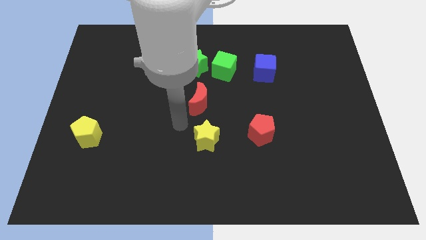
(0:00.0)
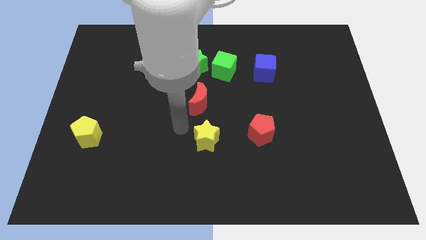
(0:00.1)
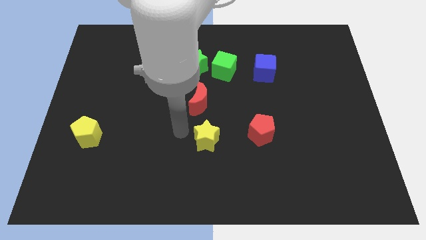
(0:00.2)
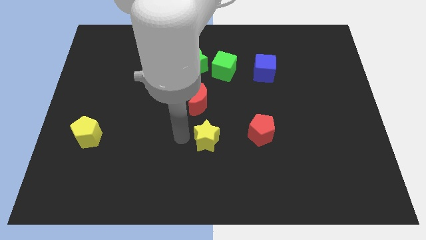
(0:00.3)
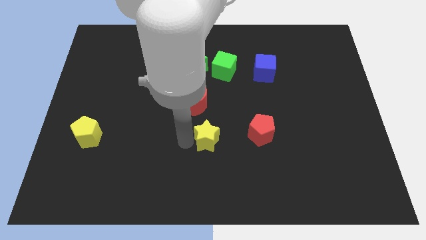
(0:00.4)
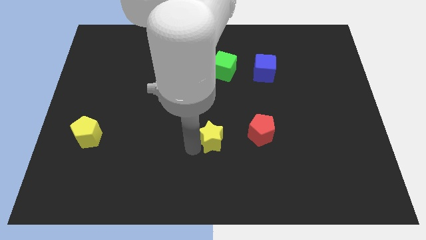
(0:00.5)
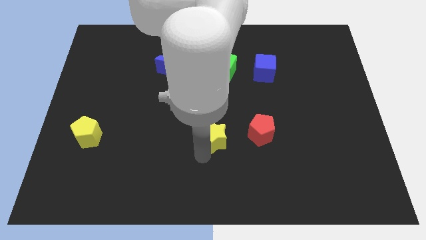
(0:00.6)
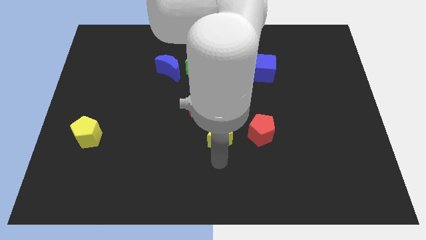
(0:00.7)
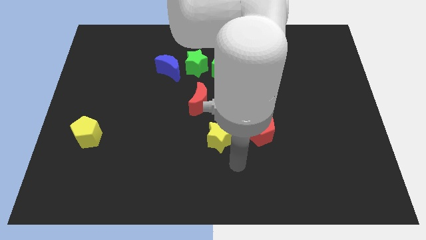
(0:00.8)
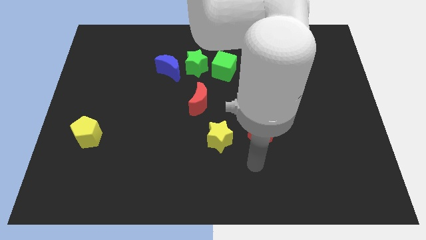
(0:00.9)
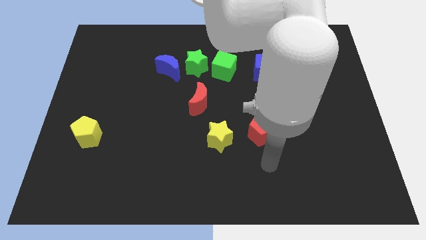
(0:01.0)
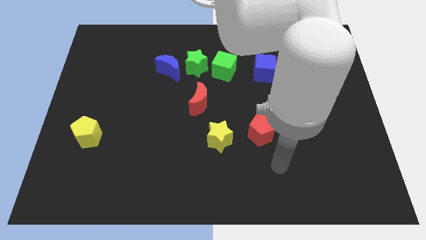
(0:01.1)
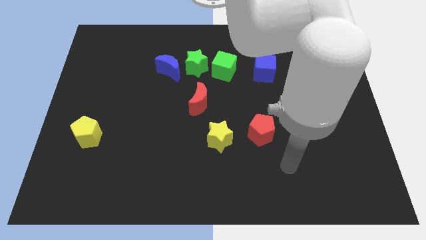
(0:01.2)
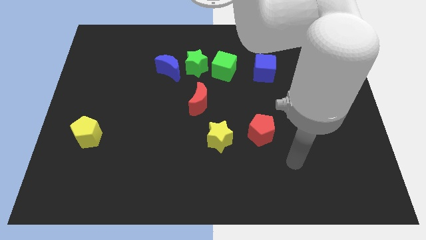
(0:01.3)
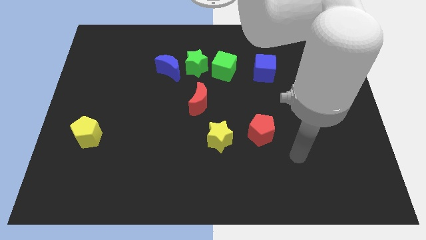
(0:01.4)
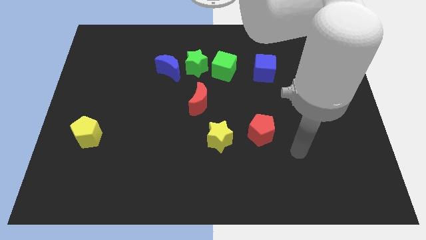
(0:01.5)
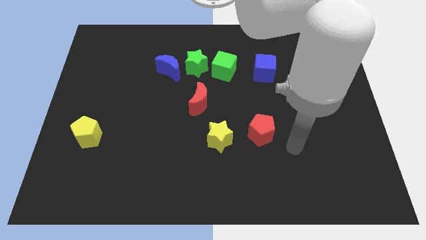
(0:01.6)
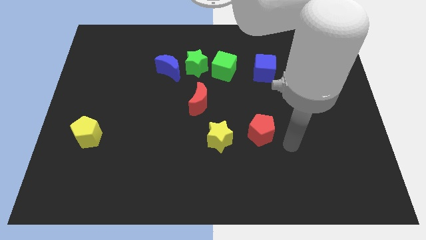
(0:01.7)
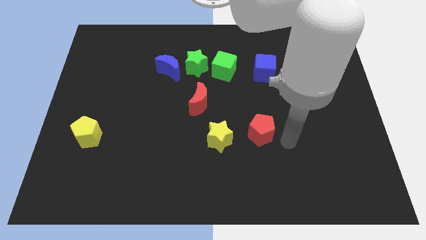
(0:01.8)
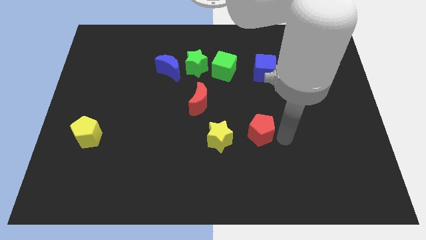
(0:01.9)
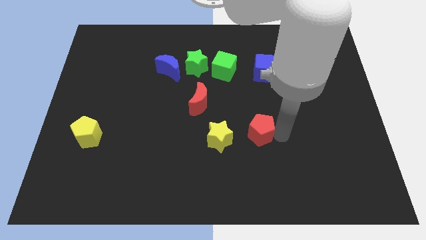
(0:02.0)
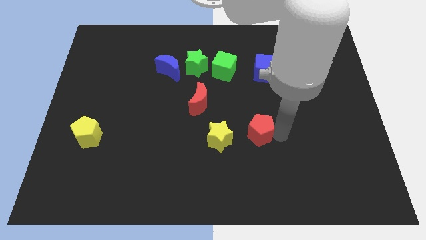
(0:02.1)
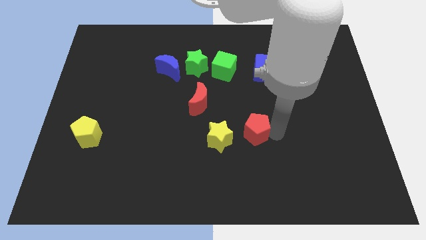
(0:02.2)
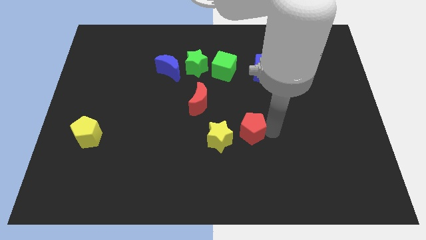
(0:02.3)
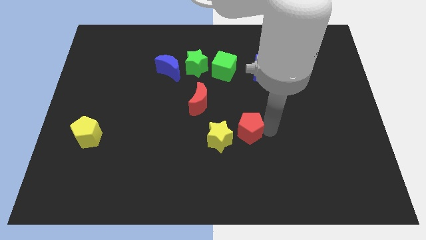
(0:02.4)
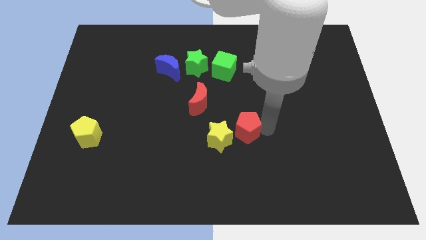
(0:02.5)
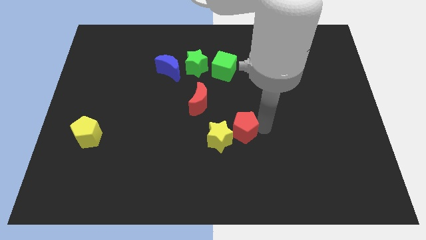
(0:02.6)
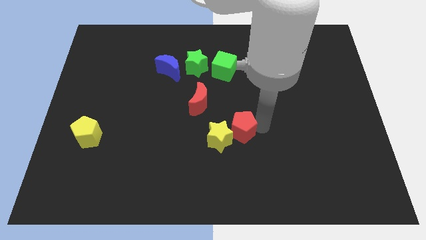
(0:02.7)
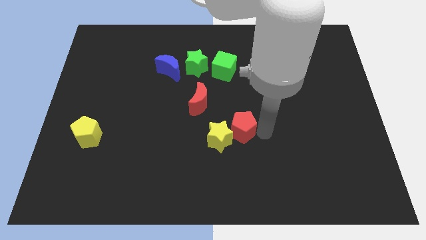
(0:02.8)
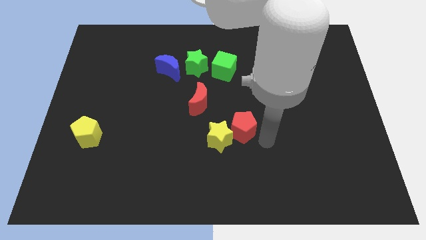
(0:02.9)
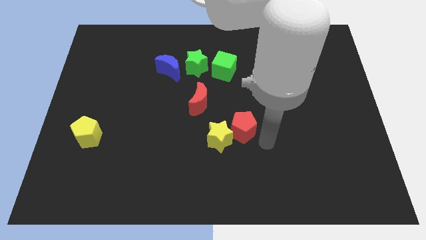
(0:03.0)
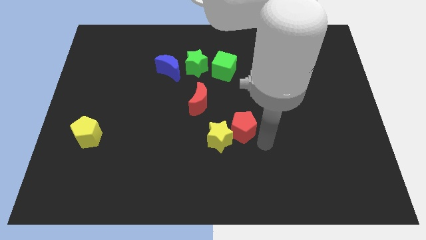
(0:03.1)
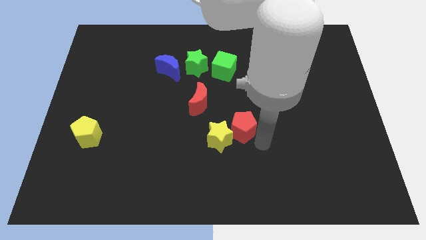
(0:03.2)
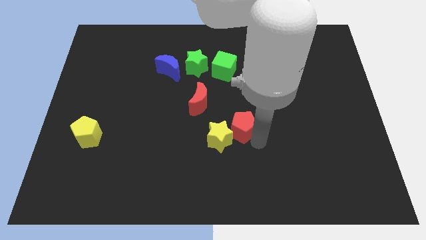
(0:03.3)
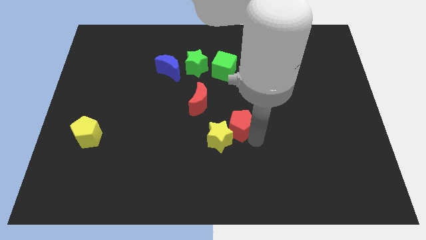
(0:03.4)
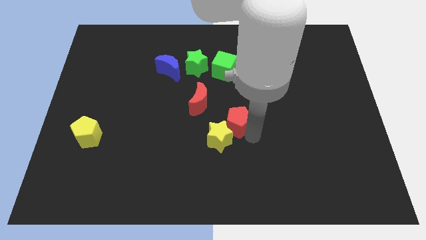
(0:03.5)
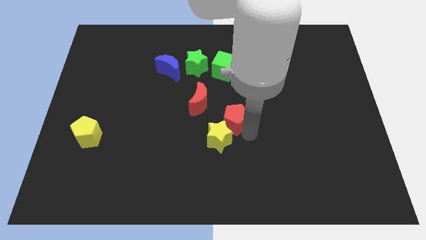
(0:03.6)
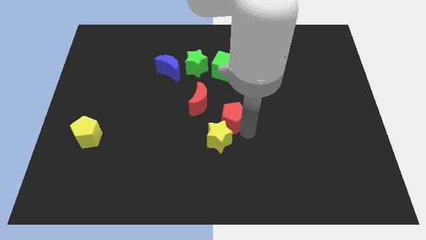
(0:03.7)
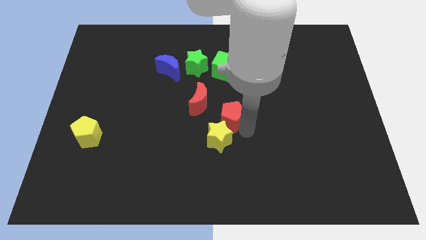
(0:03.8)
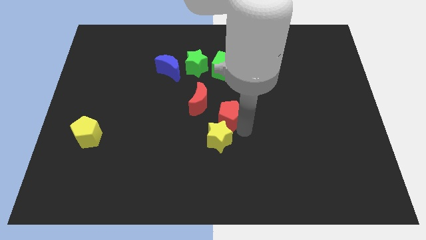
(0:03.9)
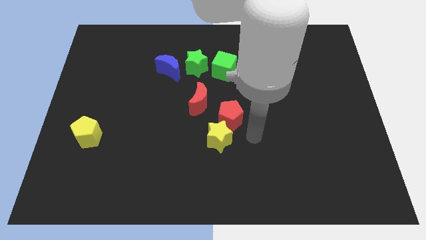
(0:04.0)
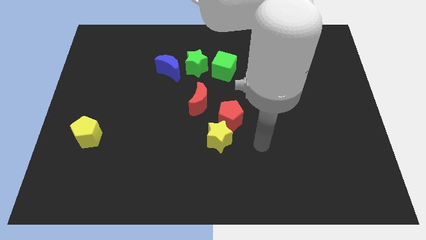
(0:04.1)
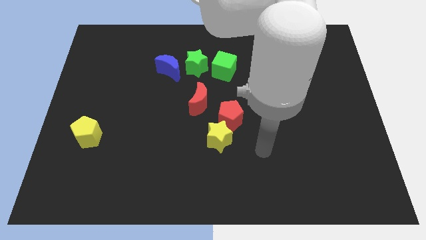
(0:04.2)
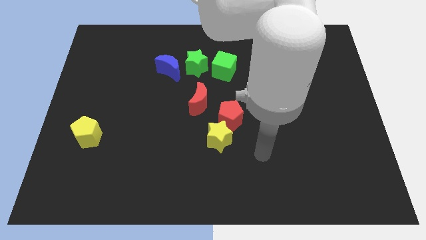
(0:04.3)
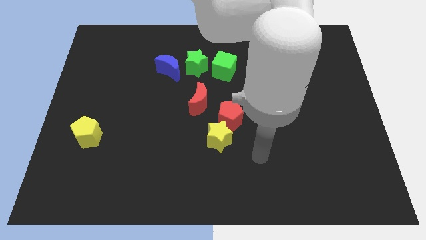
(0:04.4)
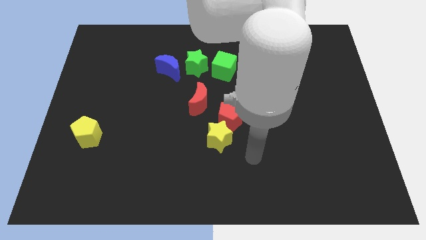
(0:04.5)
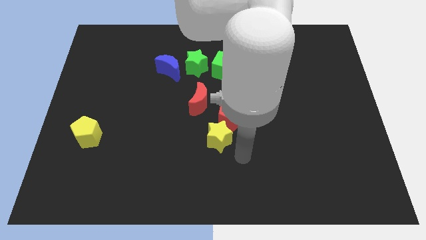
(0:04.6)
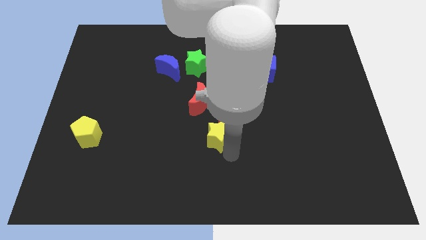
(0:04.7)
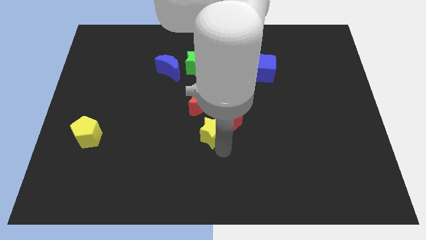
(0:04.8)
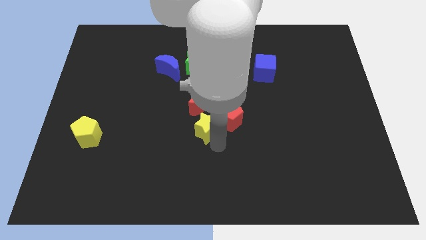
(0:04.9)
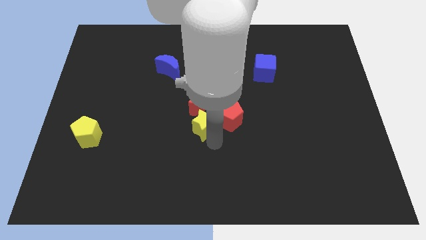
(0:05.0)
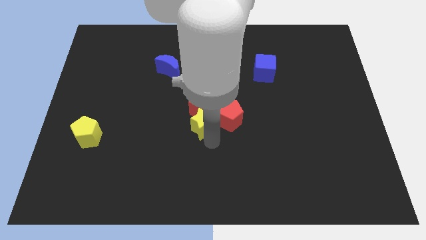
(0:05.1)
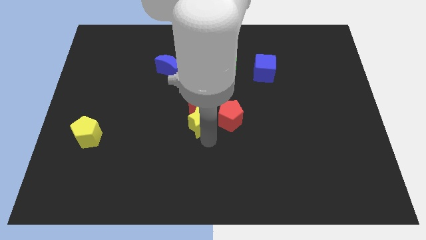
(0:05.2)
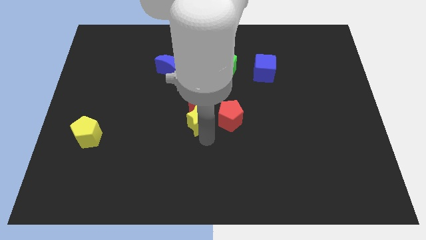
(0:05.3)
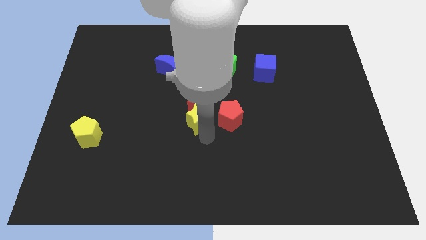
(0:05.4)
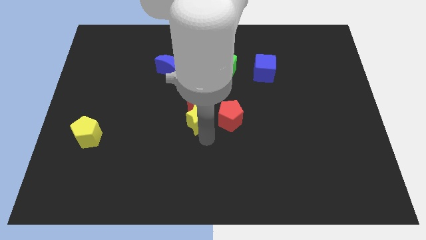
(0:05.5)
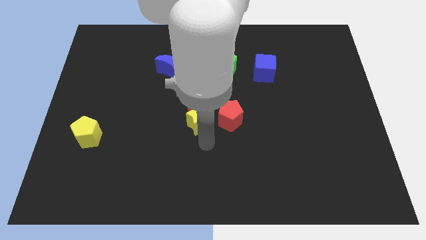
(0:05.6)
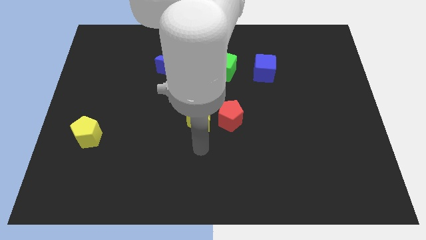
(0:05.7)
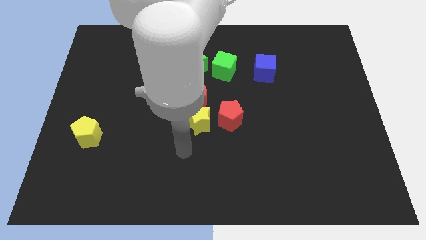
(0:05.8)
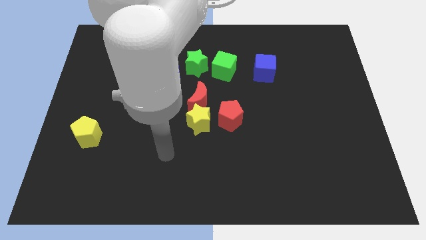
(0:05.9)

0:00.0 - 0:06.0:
push the red pentagon and the yellow star to the center of the board

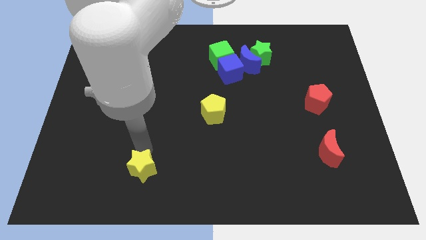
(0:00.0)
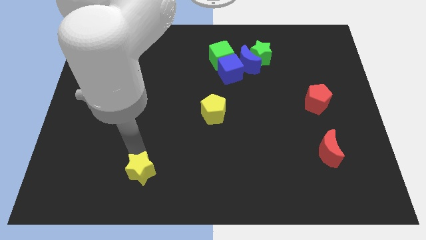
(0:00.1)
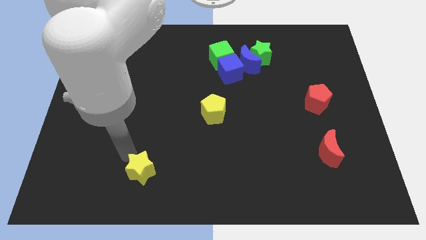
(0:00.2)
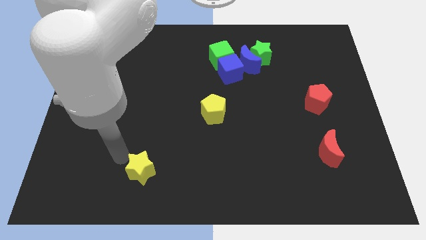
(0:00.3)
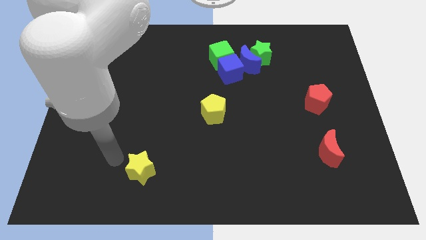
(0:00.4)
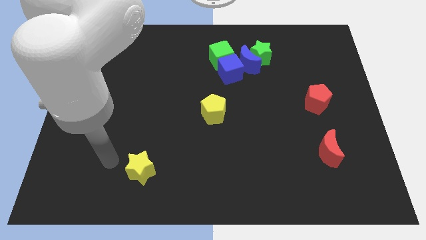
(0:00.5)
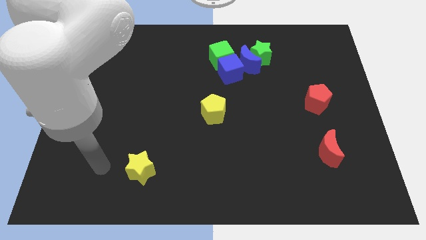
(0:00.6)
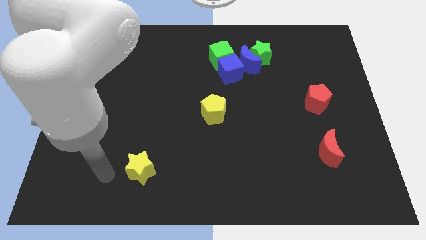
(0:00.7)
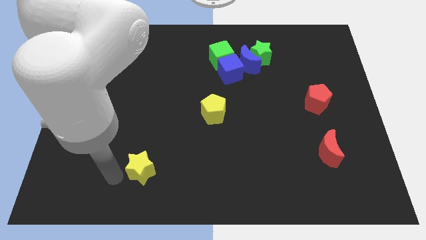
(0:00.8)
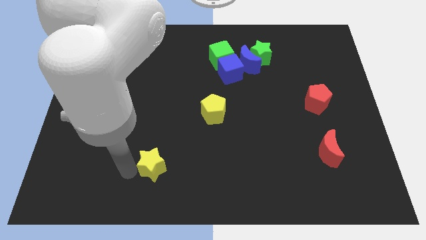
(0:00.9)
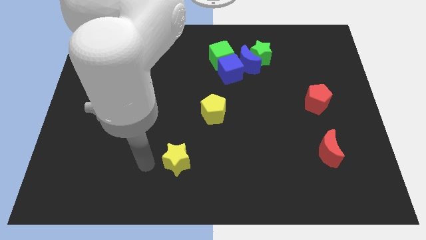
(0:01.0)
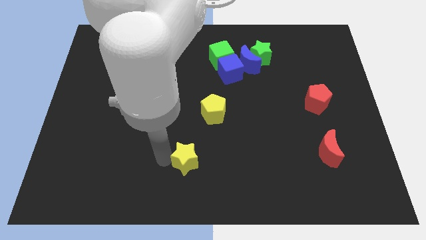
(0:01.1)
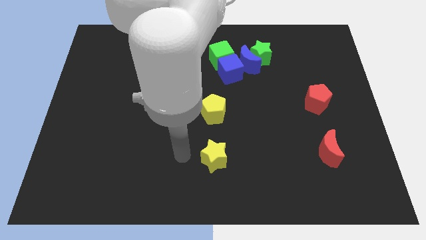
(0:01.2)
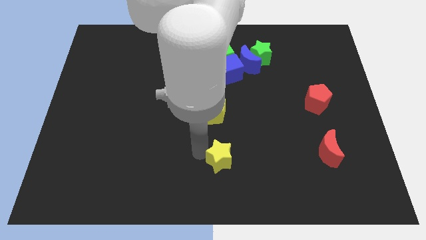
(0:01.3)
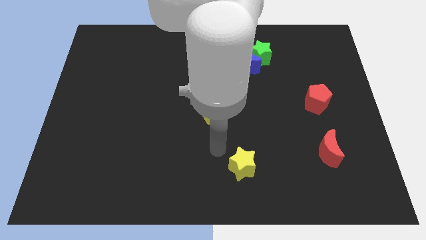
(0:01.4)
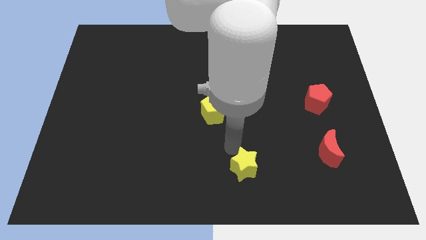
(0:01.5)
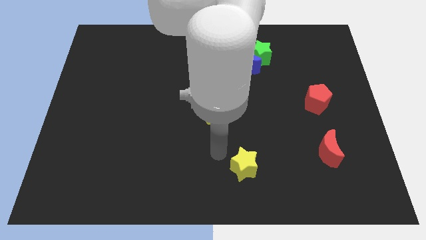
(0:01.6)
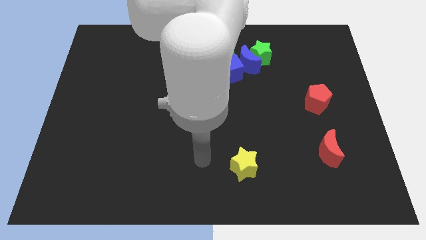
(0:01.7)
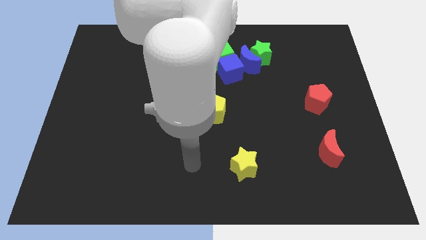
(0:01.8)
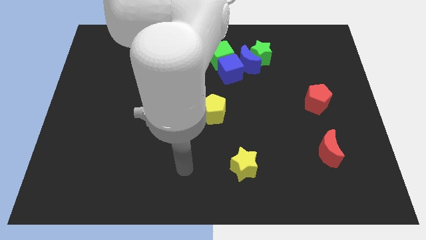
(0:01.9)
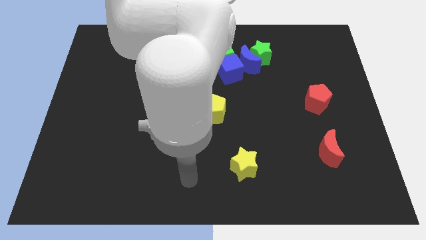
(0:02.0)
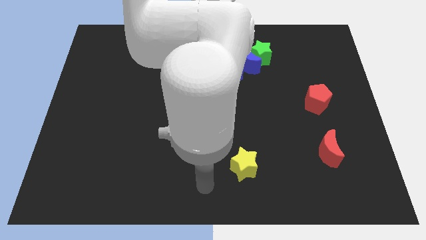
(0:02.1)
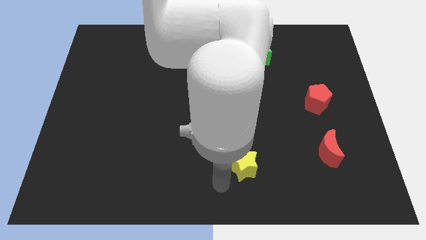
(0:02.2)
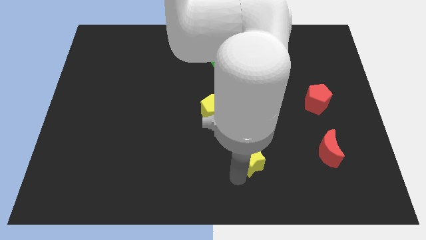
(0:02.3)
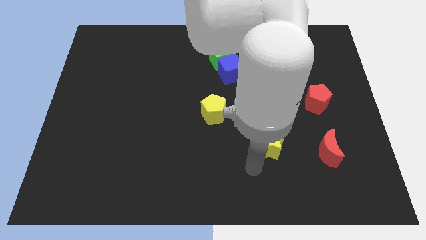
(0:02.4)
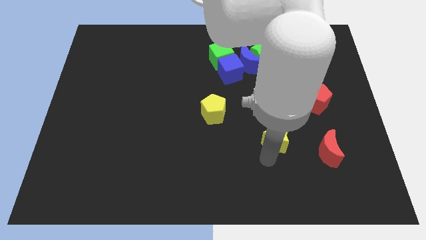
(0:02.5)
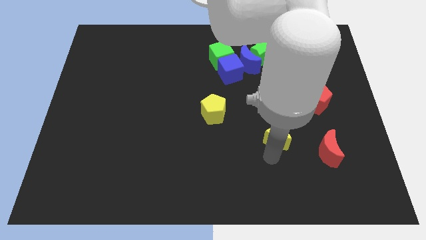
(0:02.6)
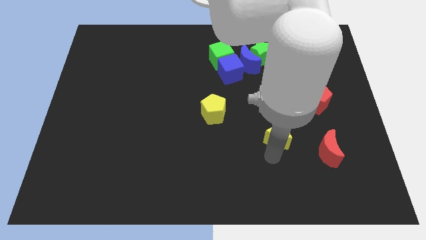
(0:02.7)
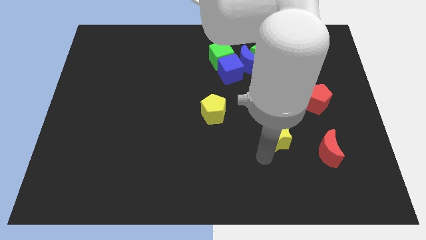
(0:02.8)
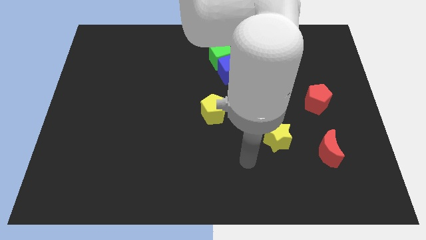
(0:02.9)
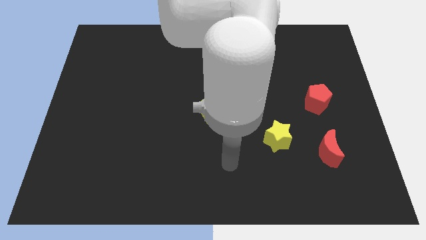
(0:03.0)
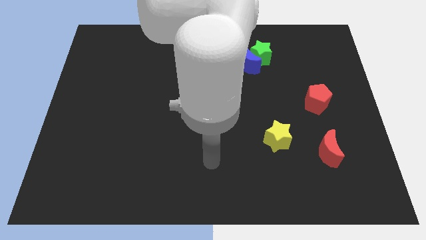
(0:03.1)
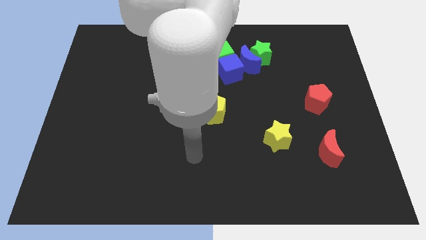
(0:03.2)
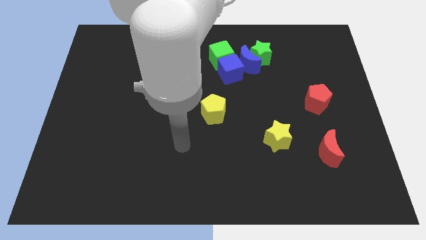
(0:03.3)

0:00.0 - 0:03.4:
move the yellow star in between the yellow pentagon and the red crescent
